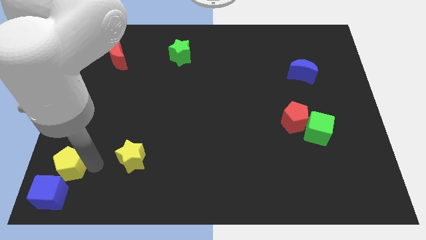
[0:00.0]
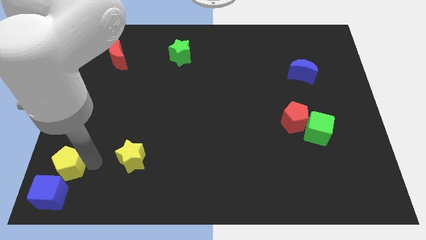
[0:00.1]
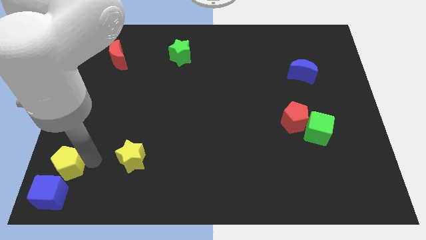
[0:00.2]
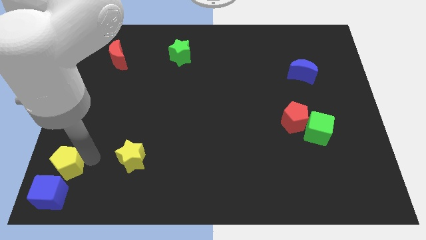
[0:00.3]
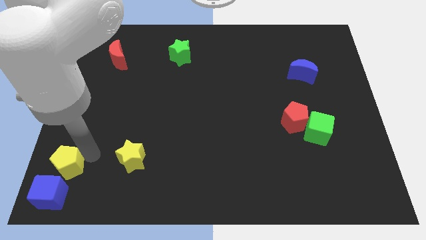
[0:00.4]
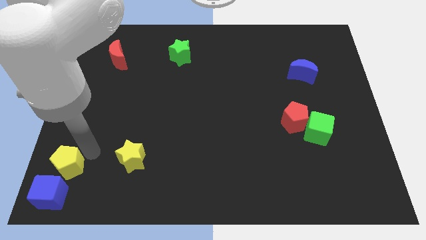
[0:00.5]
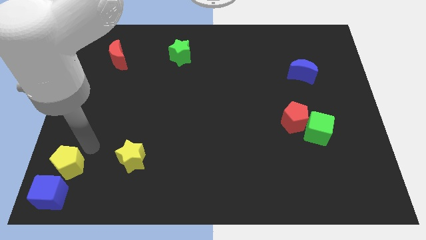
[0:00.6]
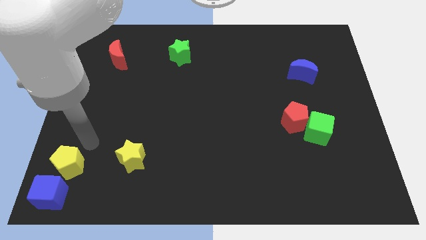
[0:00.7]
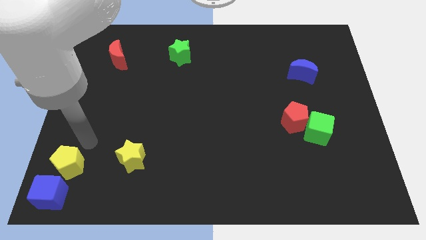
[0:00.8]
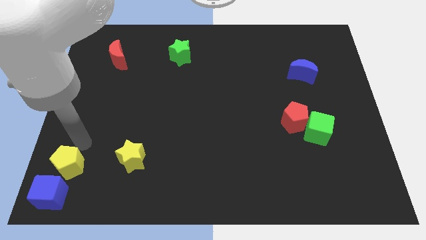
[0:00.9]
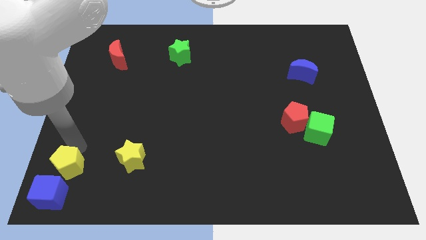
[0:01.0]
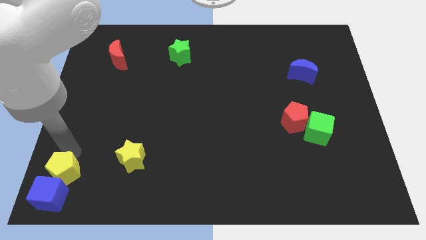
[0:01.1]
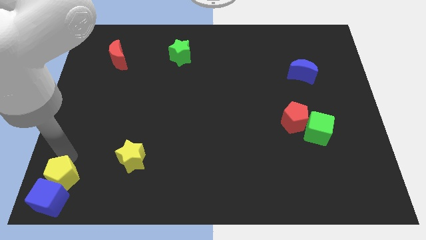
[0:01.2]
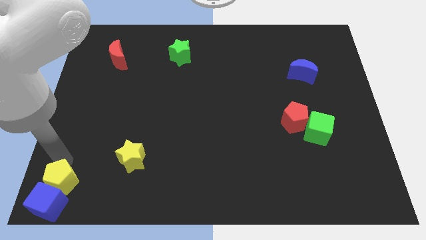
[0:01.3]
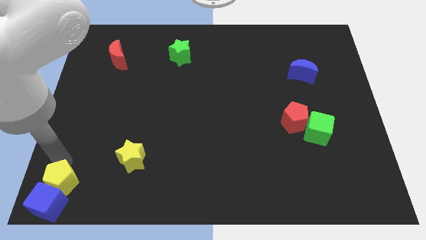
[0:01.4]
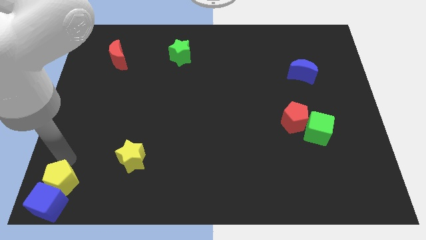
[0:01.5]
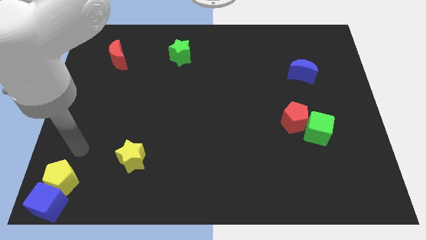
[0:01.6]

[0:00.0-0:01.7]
push the yellow pentagon and blue cube towards the bottom left side of the board

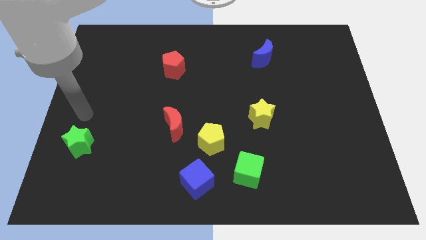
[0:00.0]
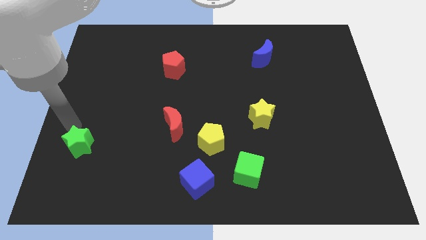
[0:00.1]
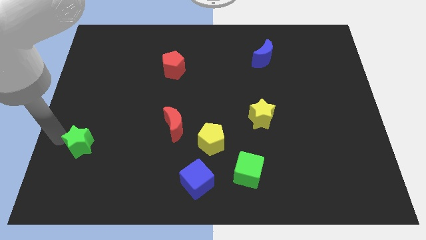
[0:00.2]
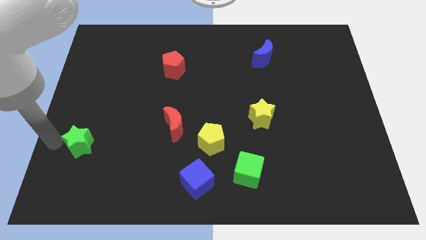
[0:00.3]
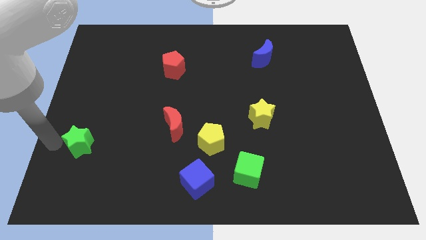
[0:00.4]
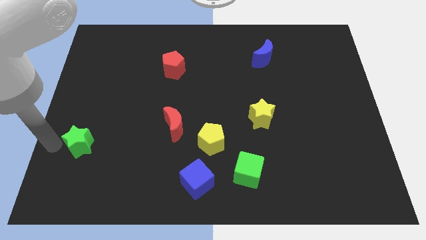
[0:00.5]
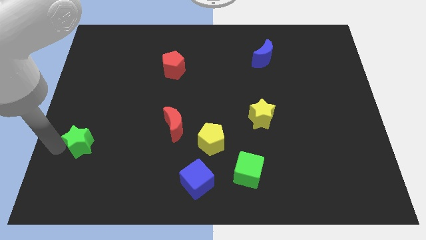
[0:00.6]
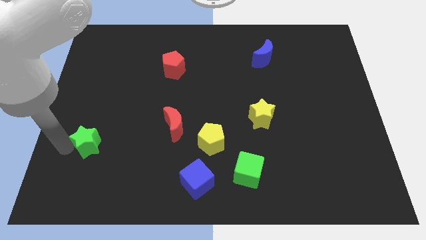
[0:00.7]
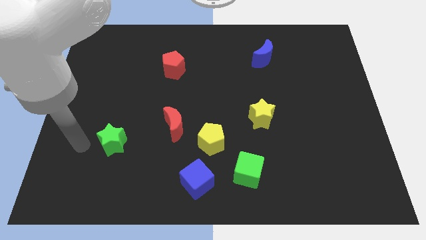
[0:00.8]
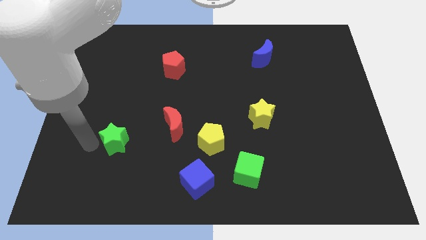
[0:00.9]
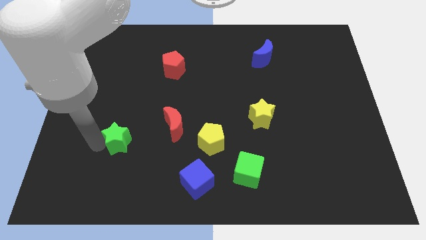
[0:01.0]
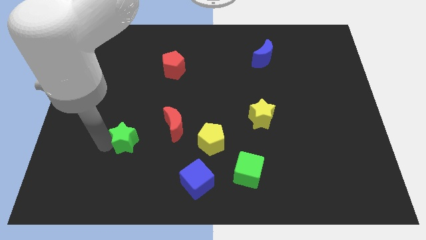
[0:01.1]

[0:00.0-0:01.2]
push the green star closer to the red moon

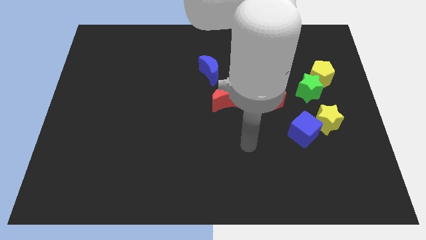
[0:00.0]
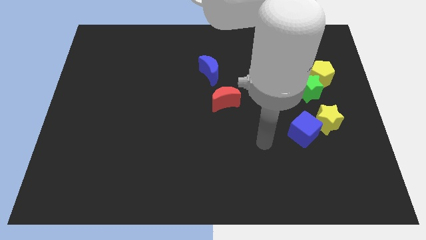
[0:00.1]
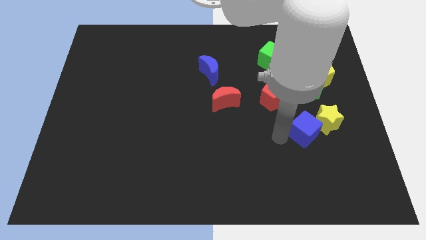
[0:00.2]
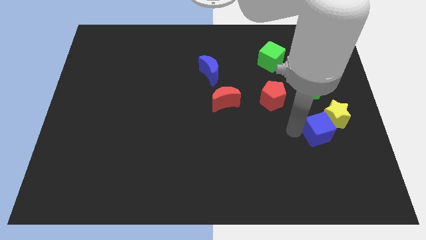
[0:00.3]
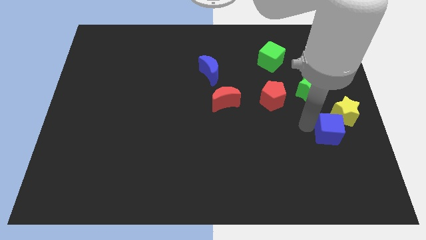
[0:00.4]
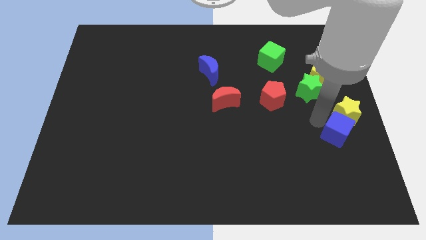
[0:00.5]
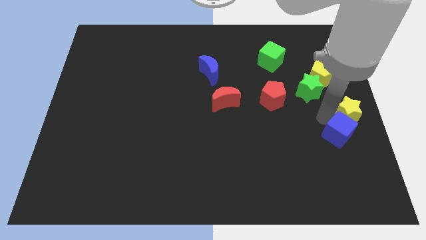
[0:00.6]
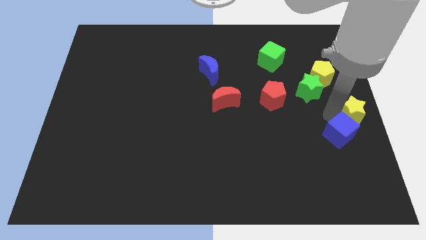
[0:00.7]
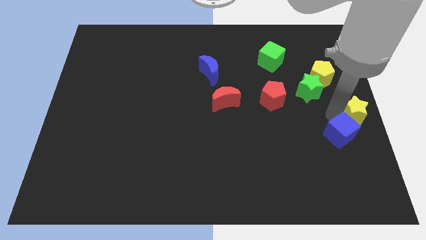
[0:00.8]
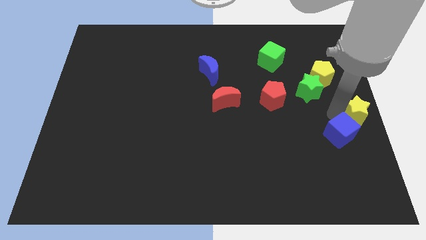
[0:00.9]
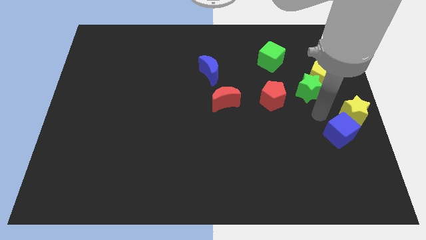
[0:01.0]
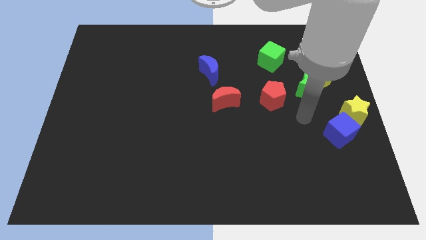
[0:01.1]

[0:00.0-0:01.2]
move the blue cube and yellow star slightly right

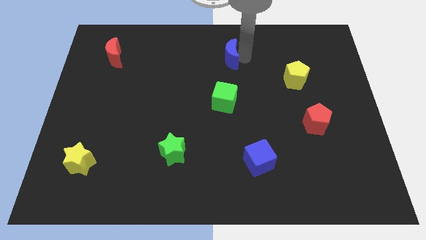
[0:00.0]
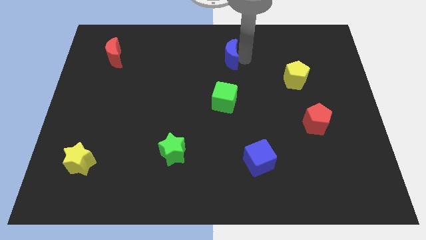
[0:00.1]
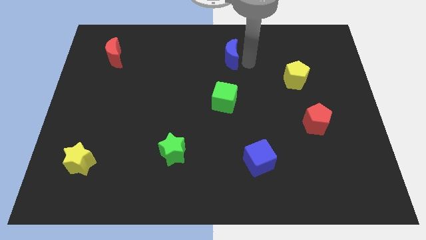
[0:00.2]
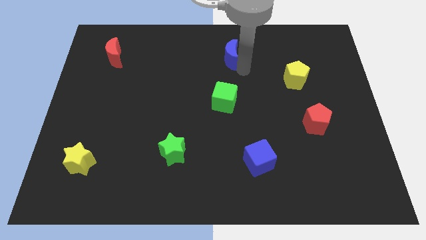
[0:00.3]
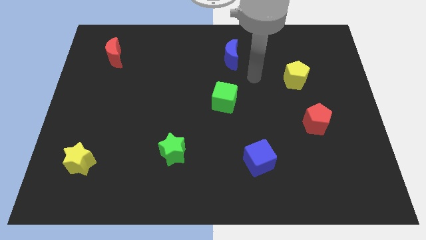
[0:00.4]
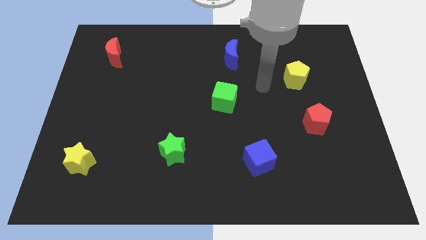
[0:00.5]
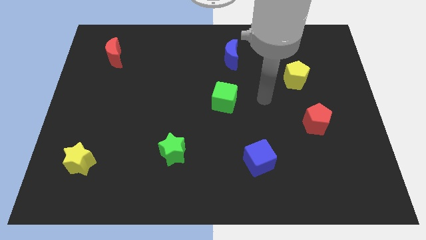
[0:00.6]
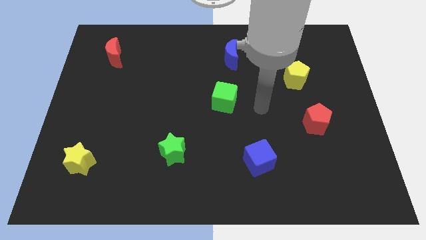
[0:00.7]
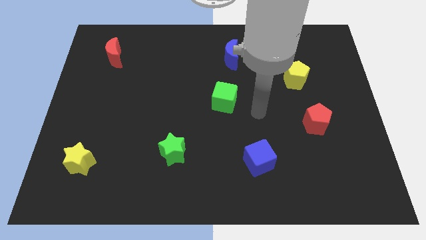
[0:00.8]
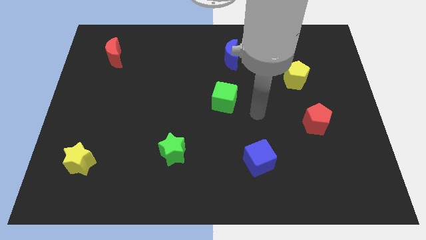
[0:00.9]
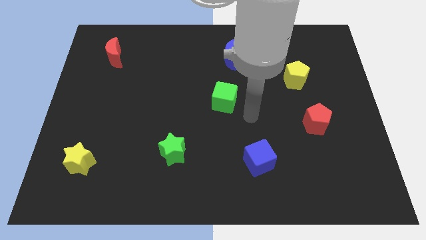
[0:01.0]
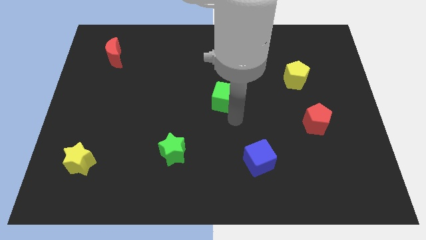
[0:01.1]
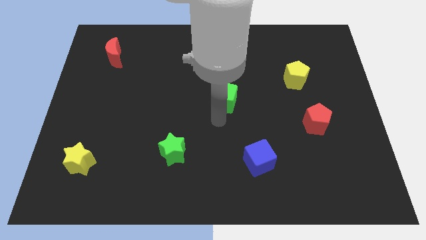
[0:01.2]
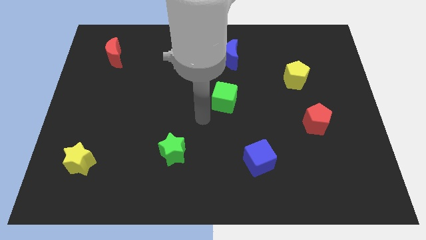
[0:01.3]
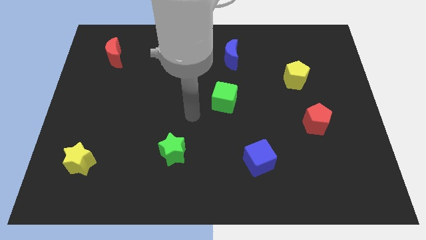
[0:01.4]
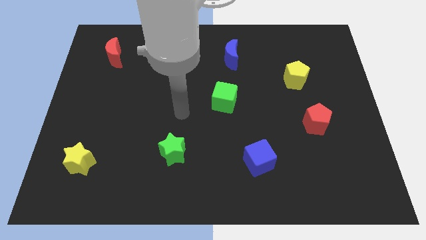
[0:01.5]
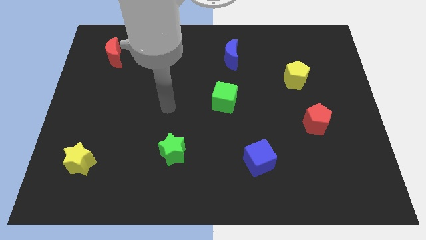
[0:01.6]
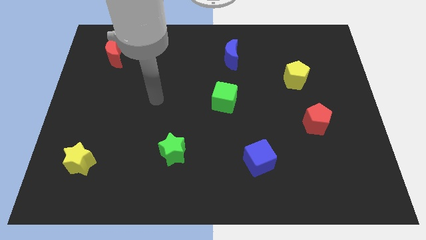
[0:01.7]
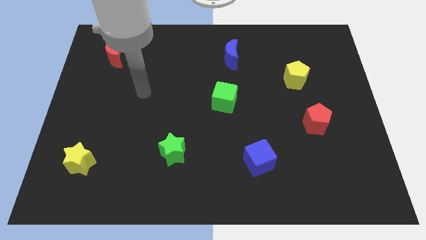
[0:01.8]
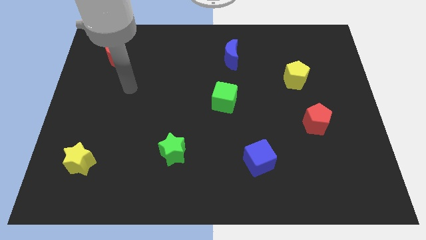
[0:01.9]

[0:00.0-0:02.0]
place your arm below red moon

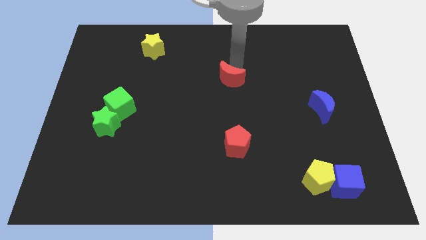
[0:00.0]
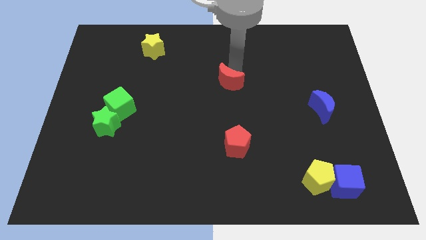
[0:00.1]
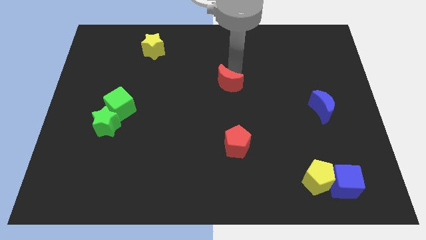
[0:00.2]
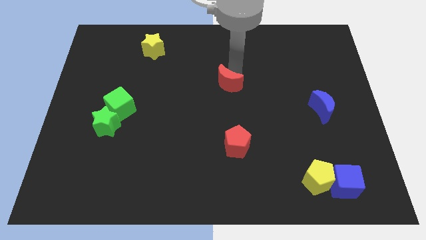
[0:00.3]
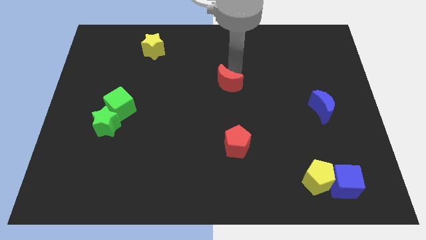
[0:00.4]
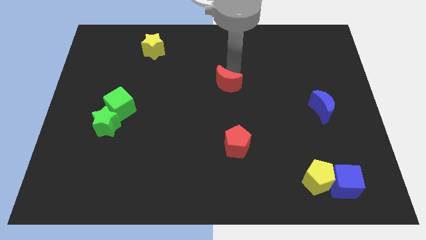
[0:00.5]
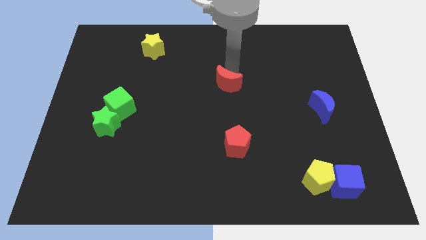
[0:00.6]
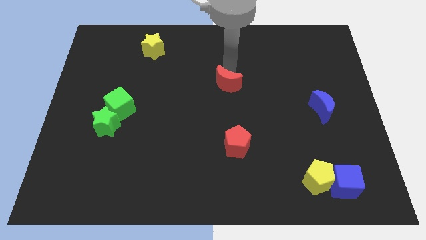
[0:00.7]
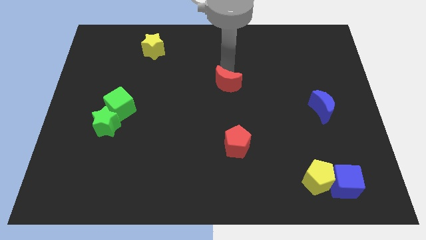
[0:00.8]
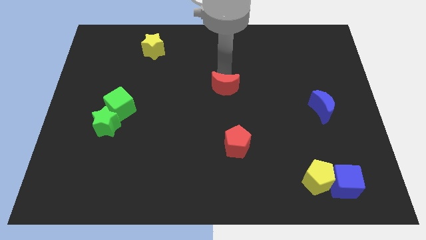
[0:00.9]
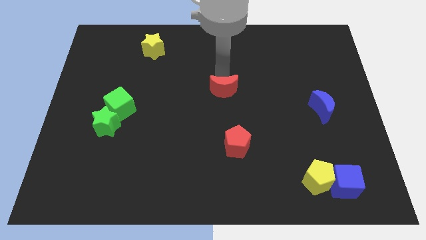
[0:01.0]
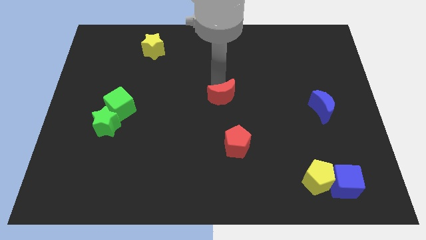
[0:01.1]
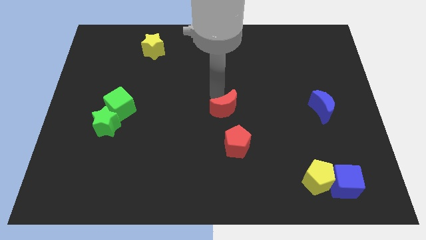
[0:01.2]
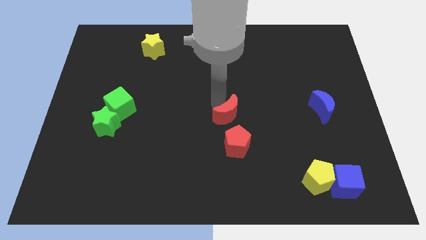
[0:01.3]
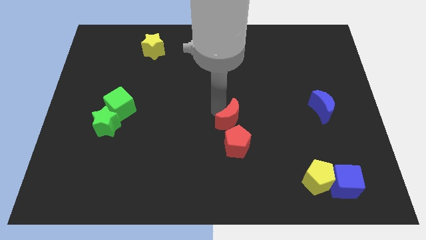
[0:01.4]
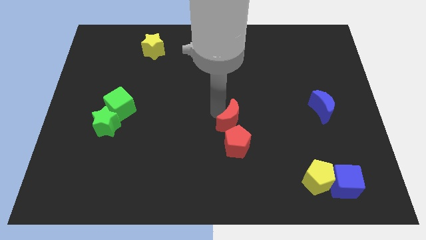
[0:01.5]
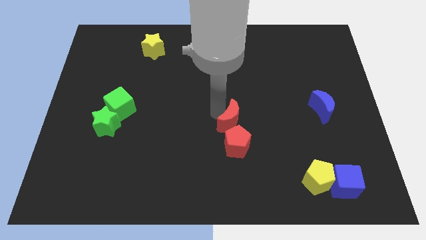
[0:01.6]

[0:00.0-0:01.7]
move the red moon close to the red pentagon

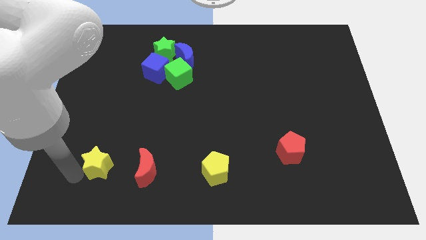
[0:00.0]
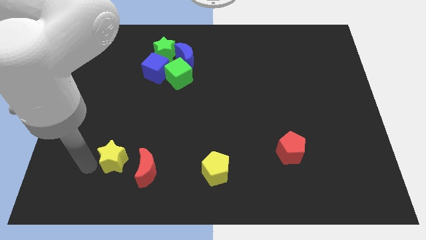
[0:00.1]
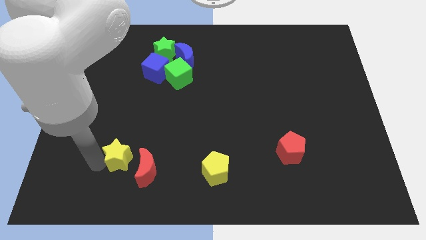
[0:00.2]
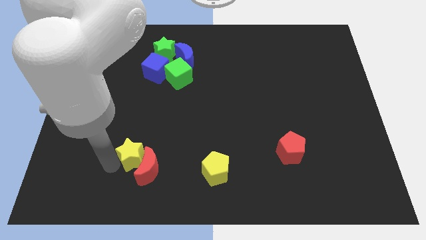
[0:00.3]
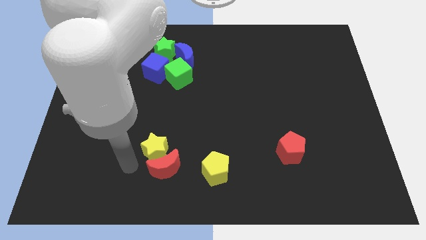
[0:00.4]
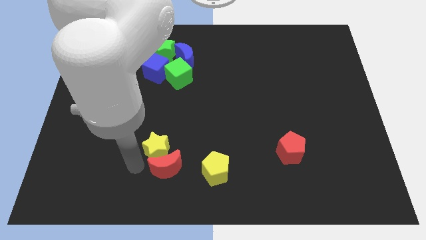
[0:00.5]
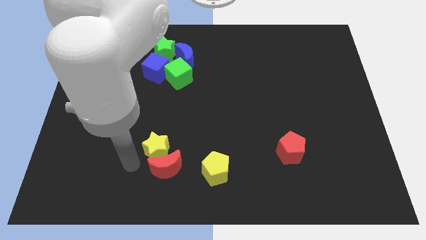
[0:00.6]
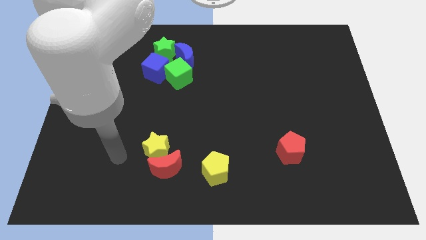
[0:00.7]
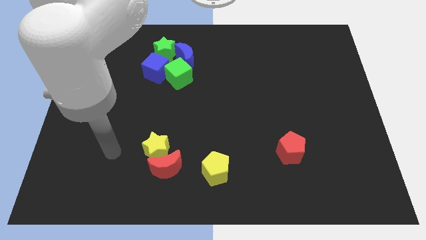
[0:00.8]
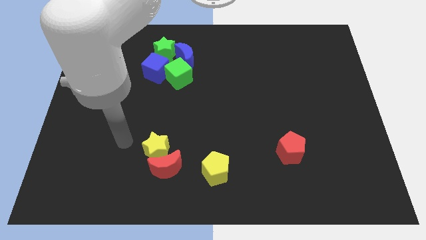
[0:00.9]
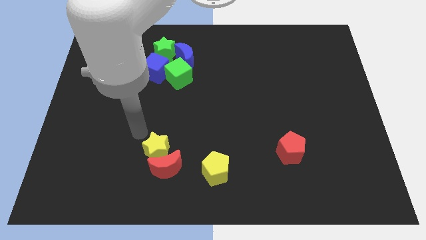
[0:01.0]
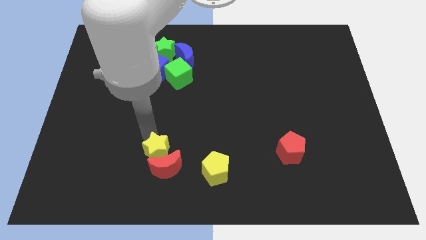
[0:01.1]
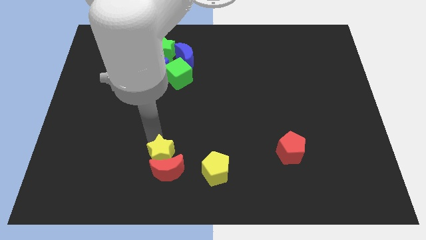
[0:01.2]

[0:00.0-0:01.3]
place the yellow star above the red moon
